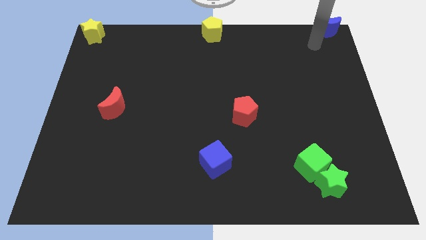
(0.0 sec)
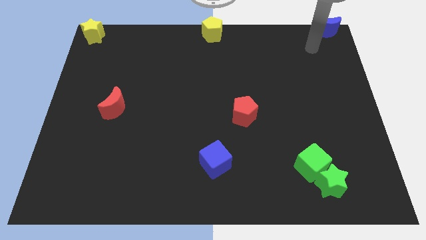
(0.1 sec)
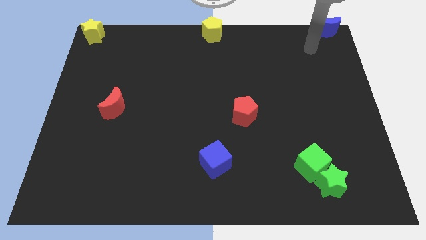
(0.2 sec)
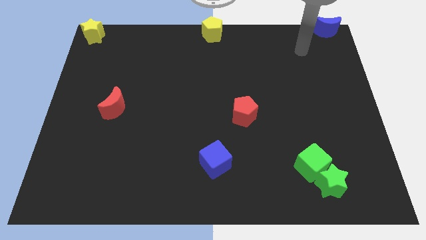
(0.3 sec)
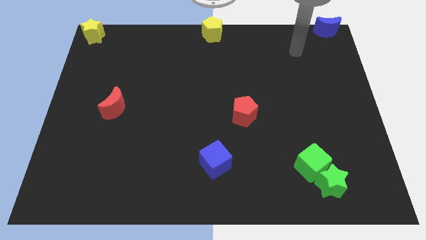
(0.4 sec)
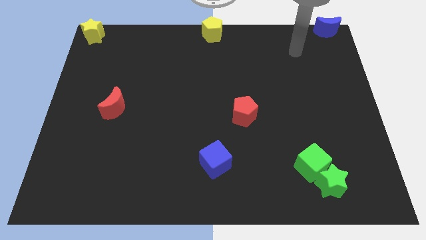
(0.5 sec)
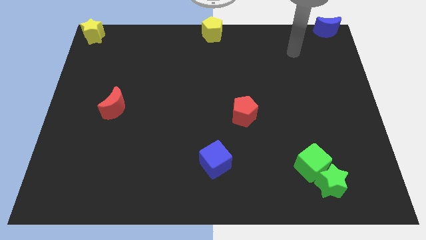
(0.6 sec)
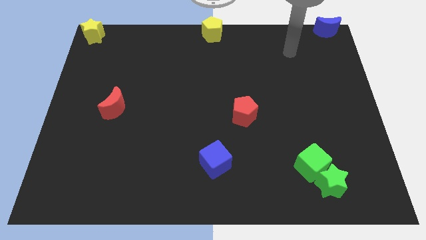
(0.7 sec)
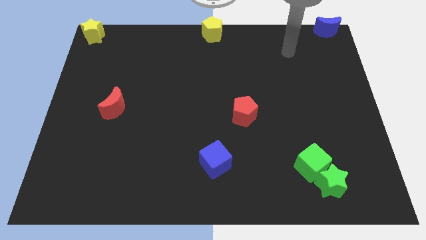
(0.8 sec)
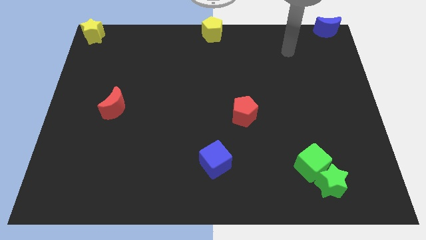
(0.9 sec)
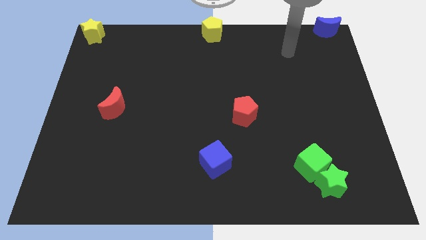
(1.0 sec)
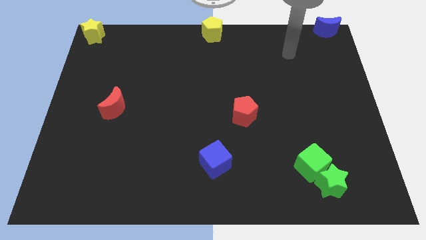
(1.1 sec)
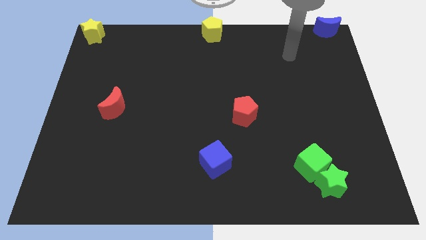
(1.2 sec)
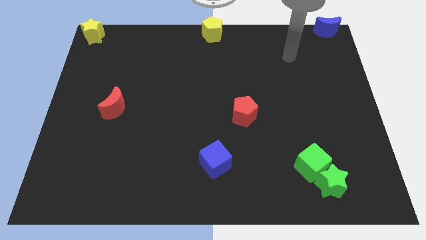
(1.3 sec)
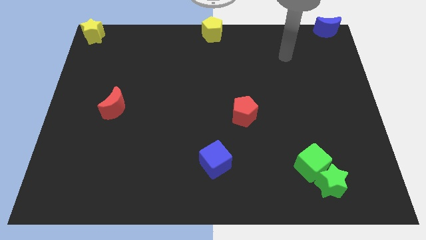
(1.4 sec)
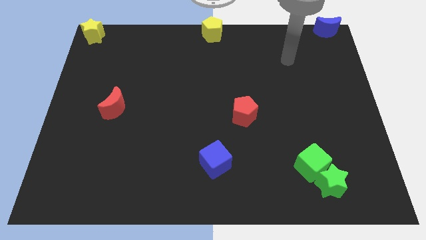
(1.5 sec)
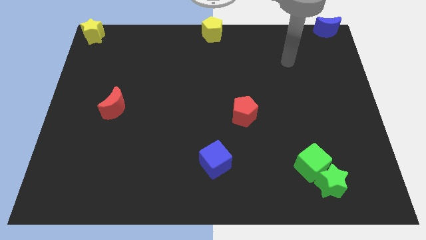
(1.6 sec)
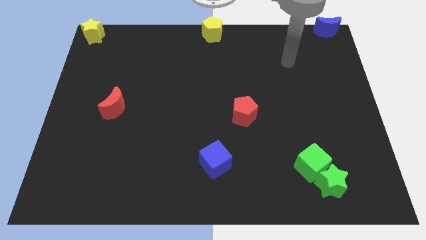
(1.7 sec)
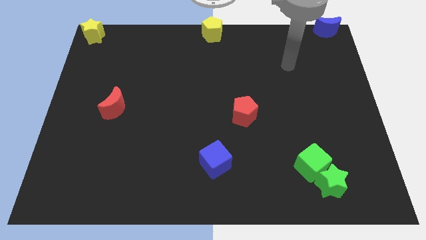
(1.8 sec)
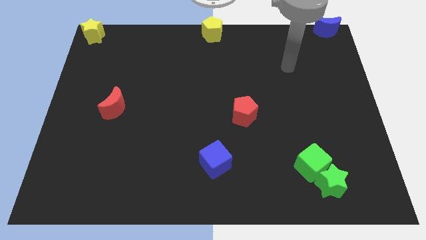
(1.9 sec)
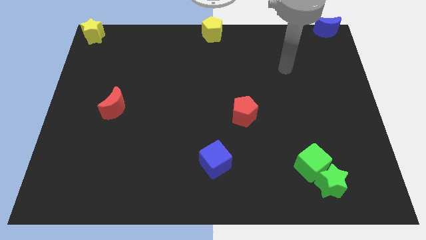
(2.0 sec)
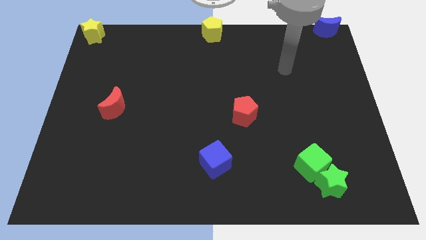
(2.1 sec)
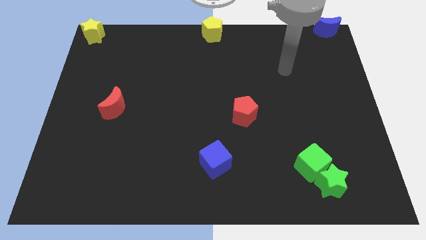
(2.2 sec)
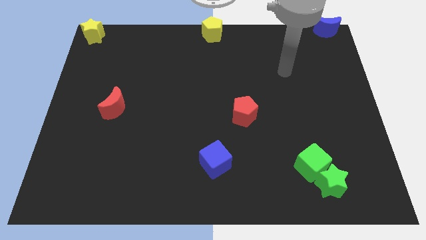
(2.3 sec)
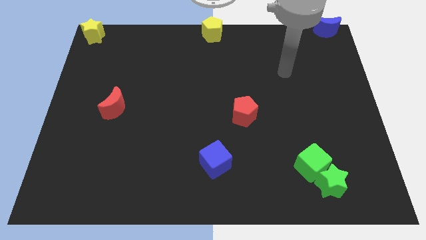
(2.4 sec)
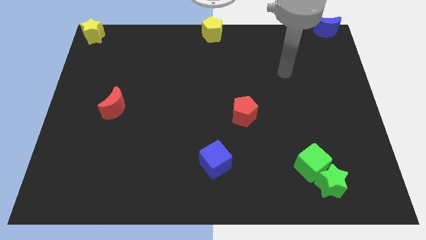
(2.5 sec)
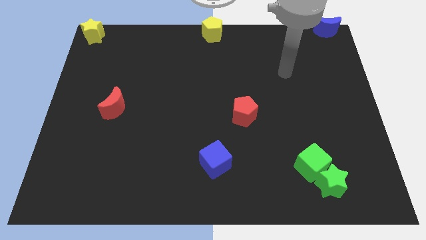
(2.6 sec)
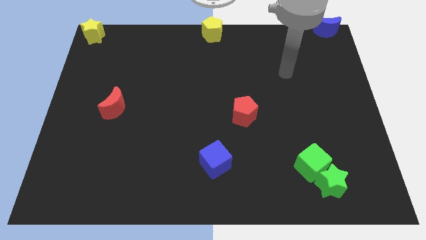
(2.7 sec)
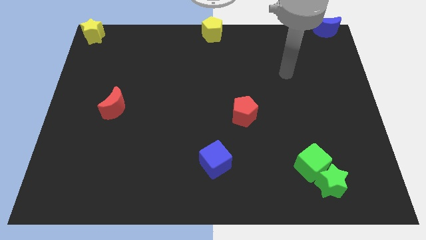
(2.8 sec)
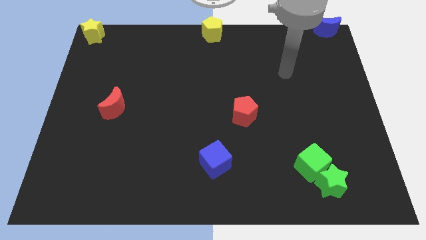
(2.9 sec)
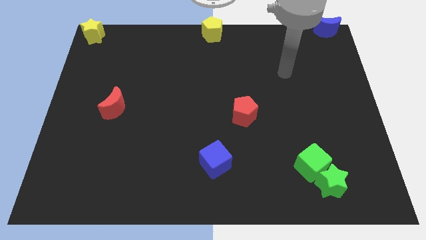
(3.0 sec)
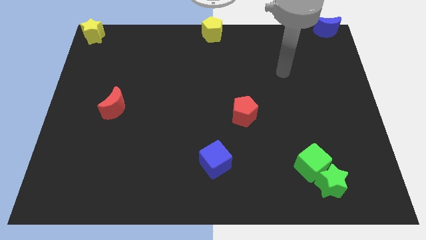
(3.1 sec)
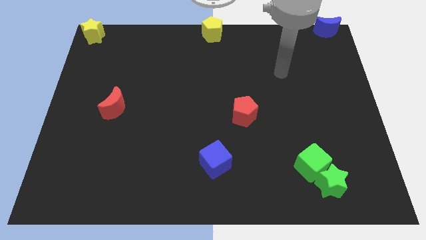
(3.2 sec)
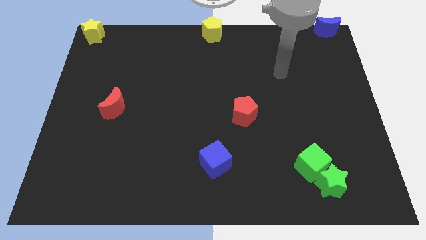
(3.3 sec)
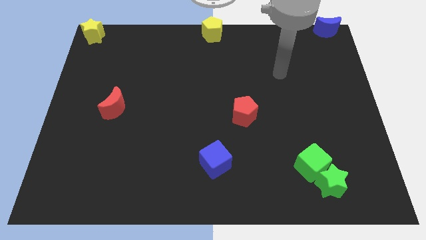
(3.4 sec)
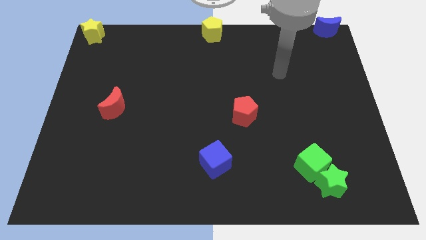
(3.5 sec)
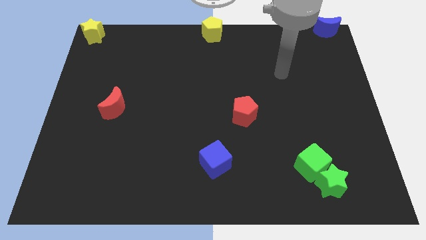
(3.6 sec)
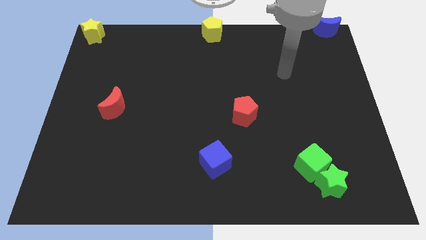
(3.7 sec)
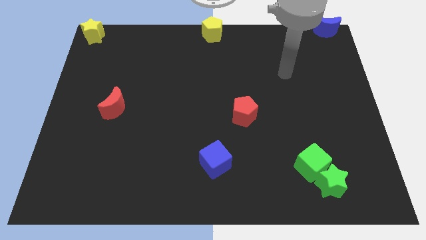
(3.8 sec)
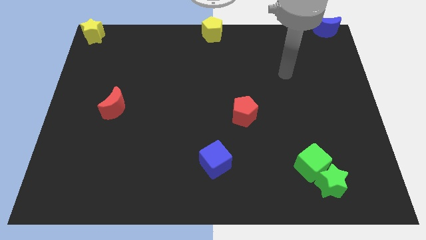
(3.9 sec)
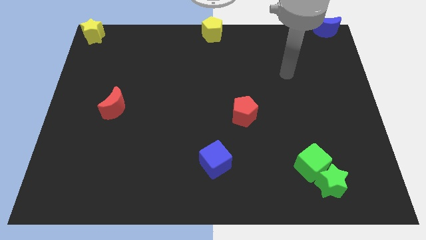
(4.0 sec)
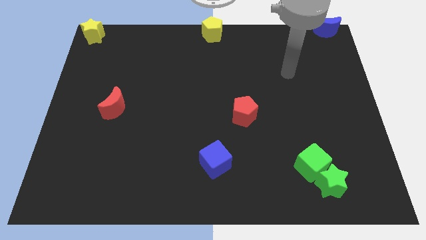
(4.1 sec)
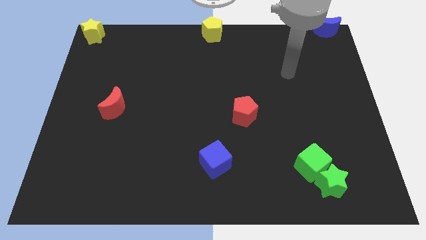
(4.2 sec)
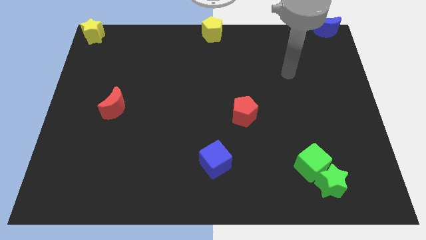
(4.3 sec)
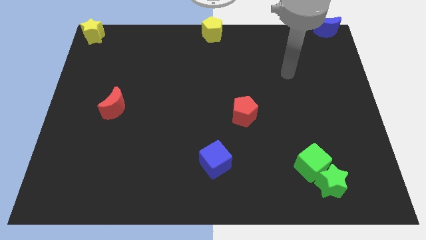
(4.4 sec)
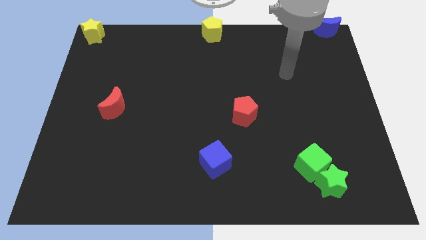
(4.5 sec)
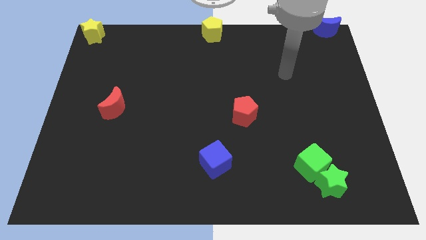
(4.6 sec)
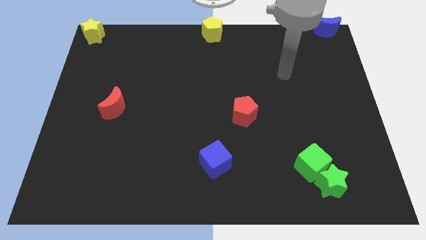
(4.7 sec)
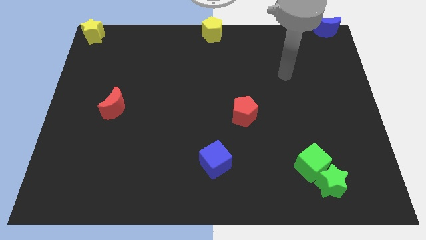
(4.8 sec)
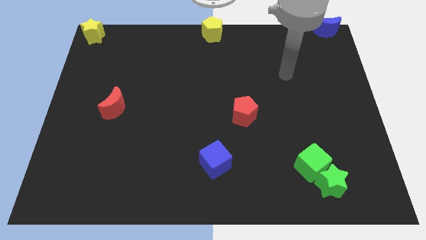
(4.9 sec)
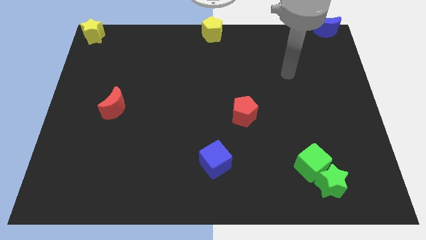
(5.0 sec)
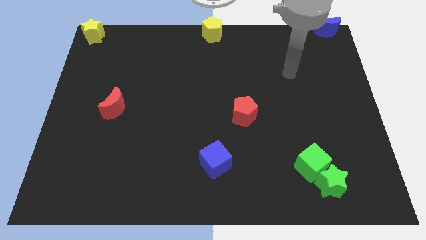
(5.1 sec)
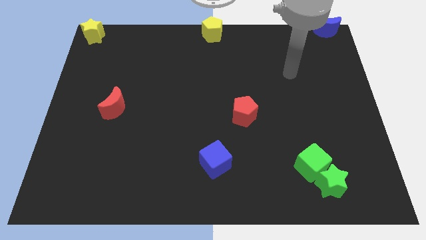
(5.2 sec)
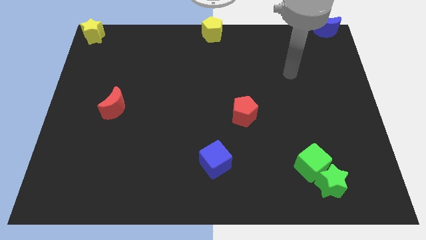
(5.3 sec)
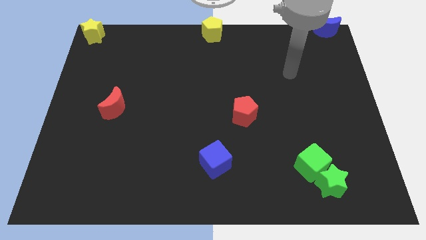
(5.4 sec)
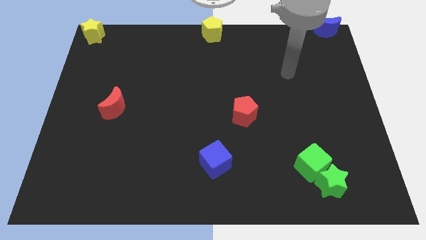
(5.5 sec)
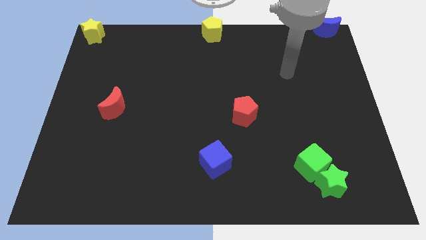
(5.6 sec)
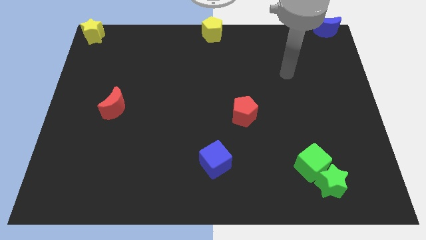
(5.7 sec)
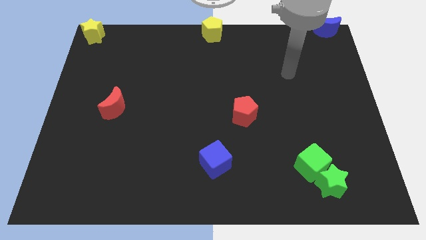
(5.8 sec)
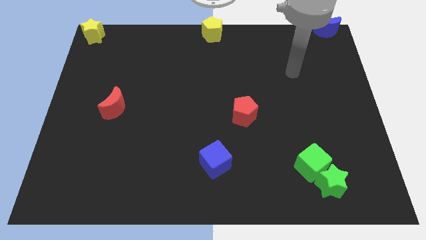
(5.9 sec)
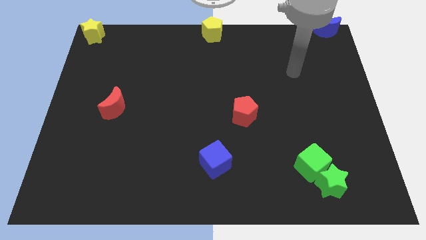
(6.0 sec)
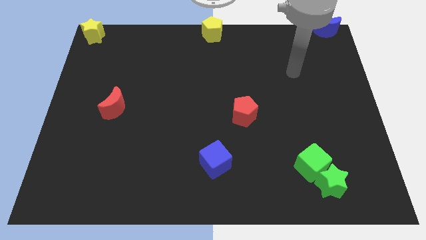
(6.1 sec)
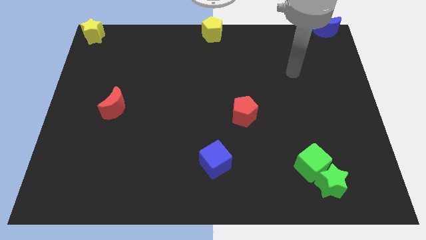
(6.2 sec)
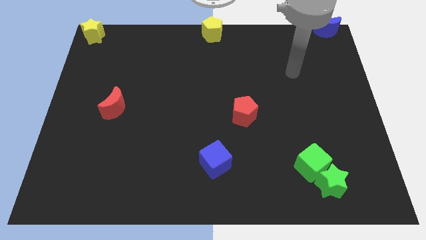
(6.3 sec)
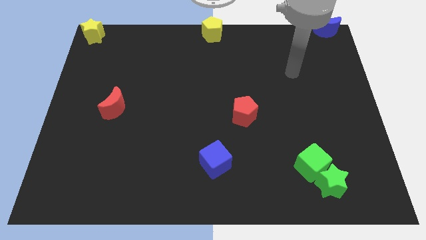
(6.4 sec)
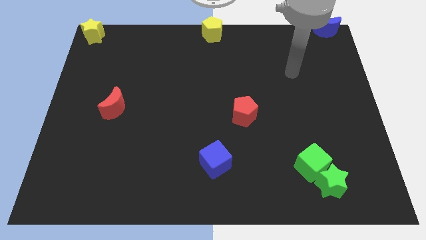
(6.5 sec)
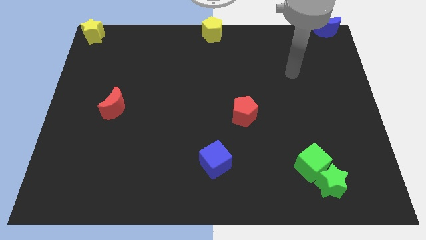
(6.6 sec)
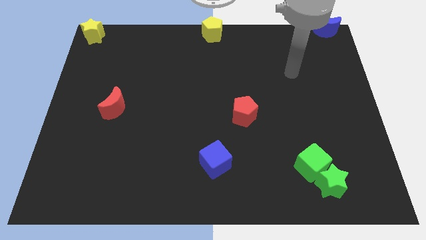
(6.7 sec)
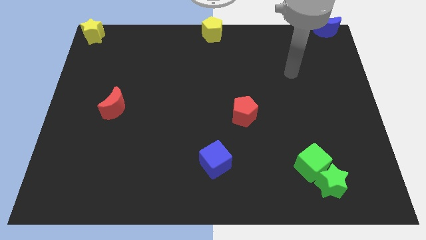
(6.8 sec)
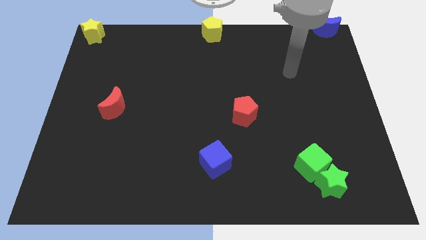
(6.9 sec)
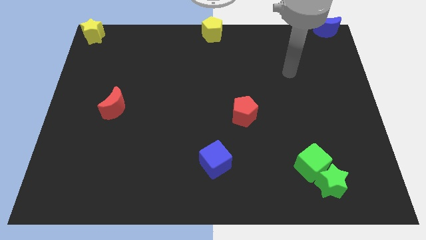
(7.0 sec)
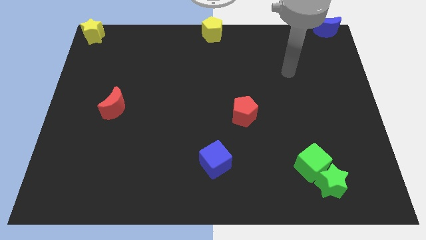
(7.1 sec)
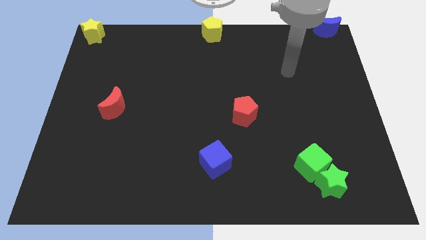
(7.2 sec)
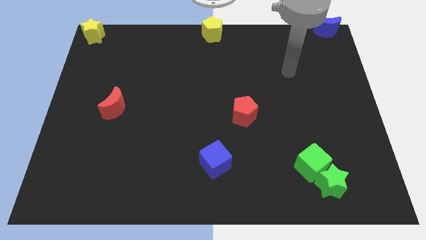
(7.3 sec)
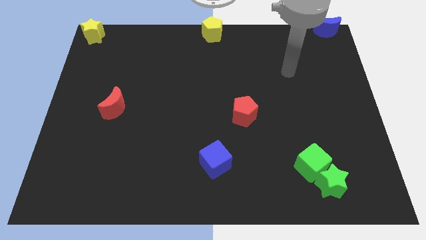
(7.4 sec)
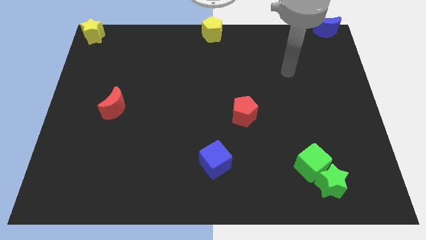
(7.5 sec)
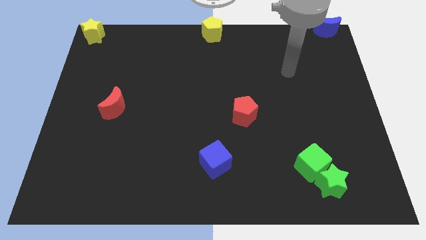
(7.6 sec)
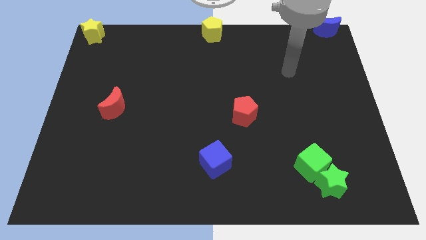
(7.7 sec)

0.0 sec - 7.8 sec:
move the arm away from the blue moon

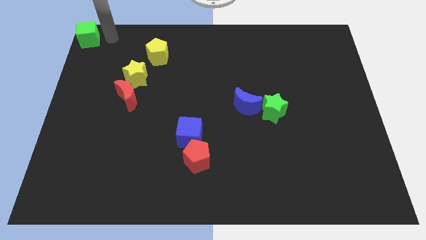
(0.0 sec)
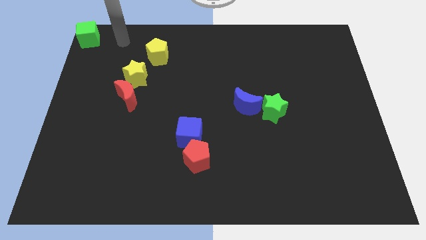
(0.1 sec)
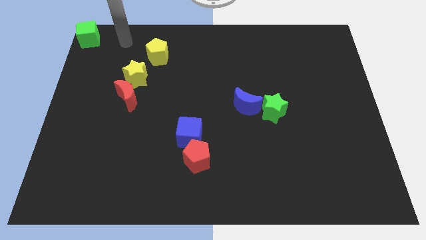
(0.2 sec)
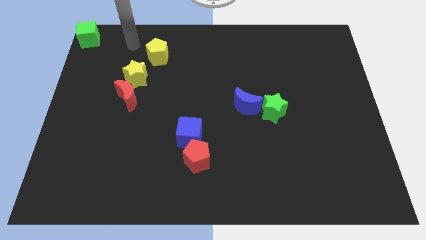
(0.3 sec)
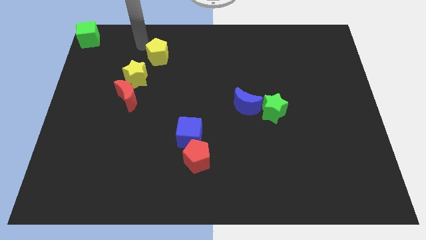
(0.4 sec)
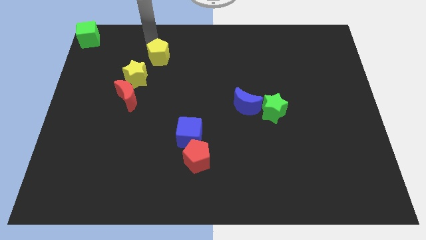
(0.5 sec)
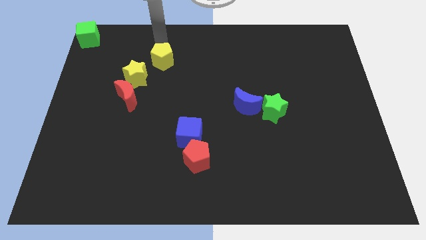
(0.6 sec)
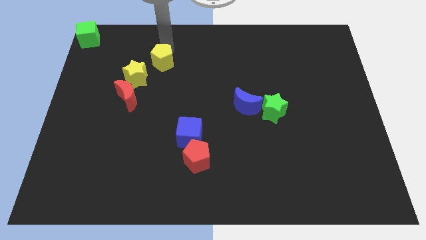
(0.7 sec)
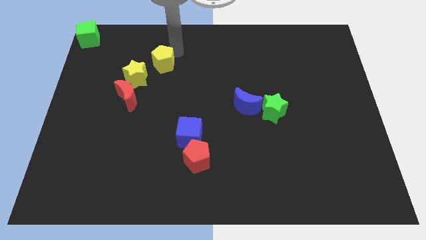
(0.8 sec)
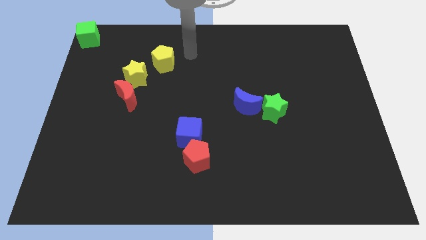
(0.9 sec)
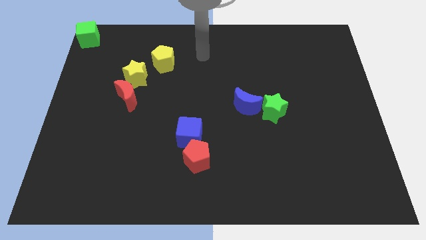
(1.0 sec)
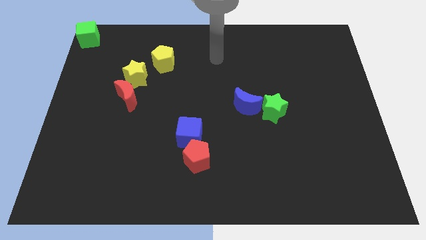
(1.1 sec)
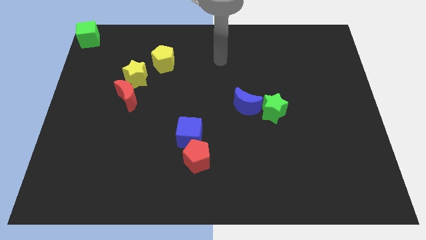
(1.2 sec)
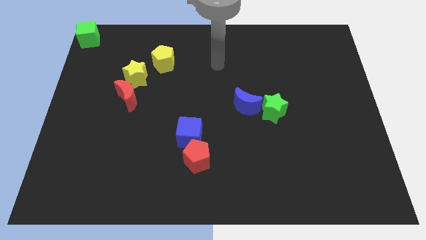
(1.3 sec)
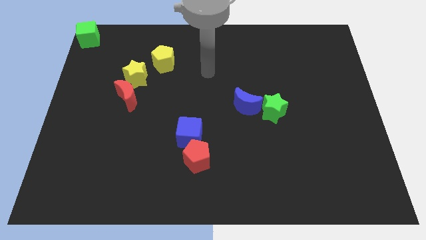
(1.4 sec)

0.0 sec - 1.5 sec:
push the yellow pentagon slightly to the bottom
